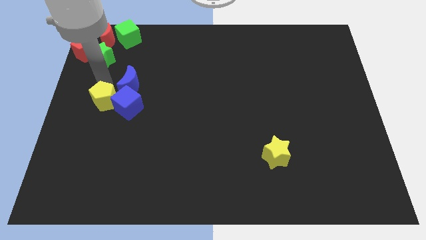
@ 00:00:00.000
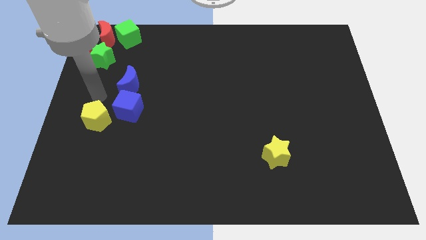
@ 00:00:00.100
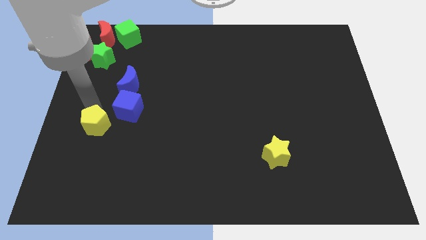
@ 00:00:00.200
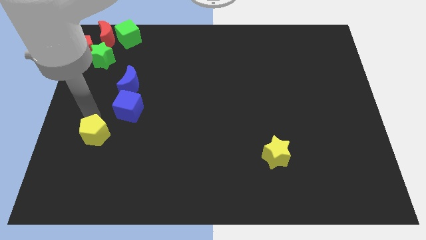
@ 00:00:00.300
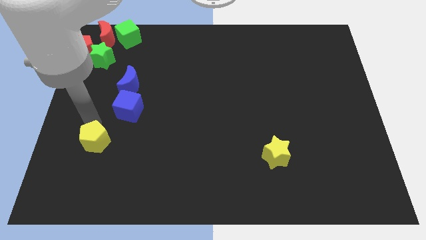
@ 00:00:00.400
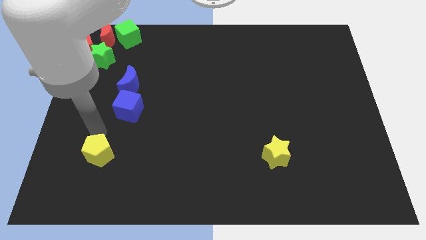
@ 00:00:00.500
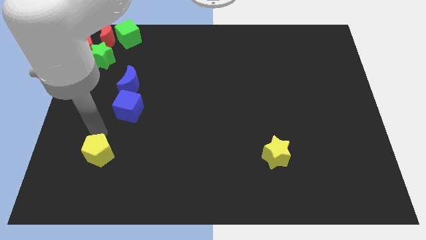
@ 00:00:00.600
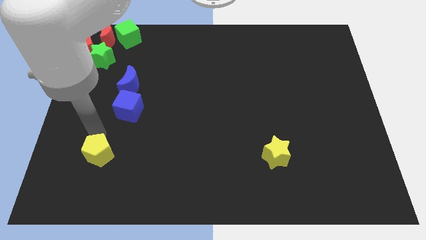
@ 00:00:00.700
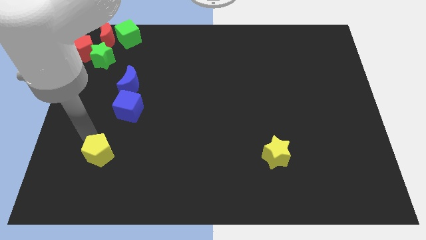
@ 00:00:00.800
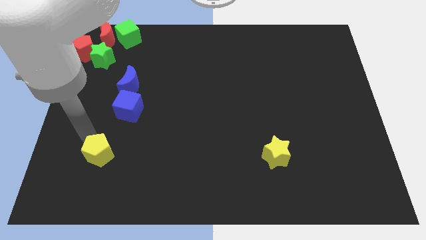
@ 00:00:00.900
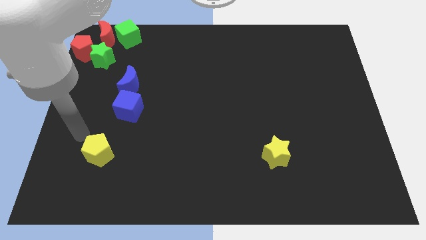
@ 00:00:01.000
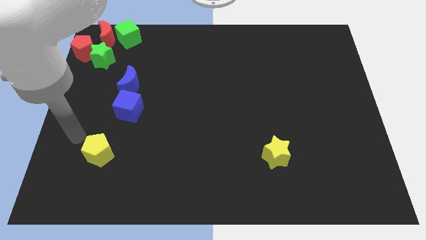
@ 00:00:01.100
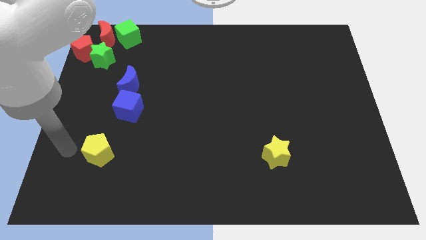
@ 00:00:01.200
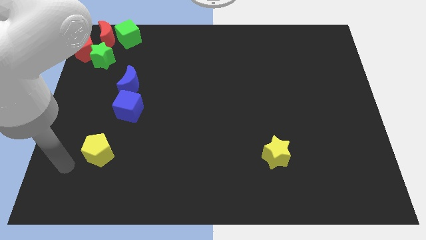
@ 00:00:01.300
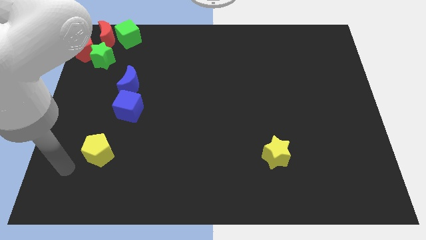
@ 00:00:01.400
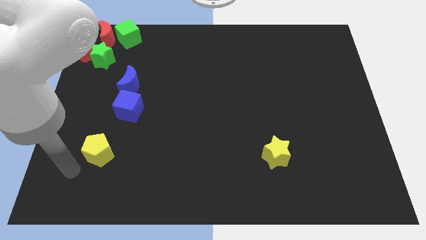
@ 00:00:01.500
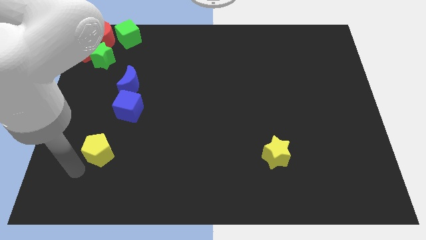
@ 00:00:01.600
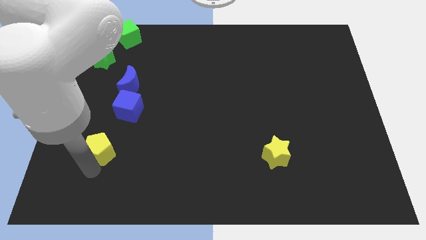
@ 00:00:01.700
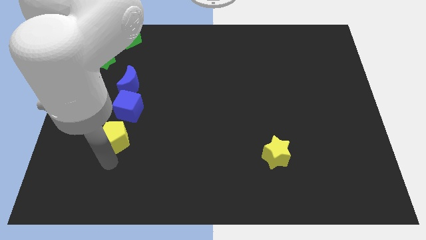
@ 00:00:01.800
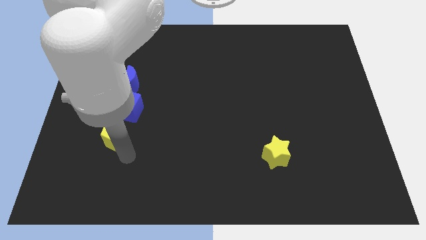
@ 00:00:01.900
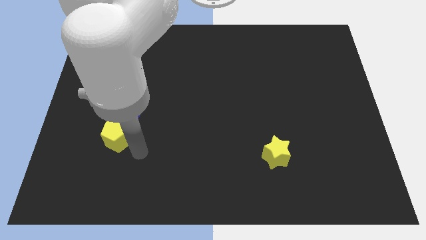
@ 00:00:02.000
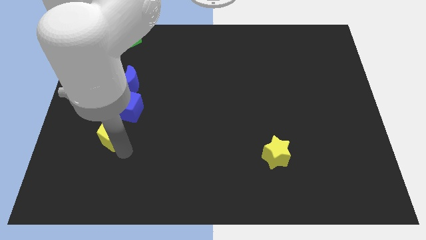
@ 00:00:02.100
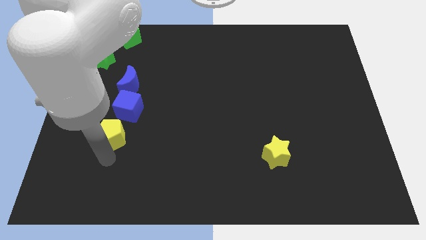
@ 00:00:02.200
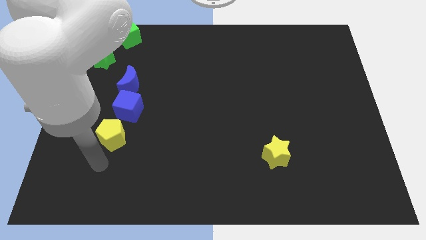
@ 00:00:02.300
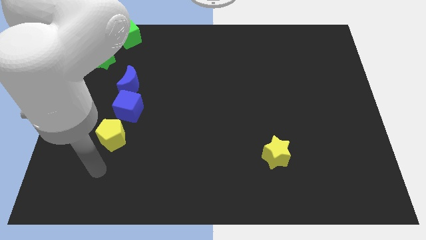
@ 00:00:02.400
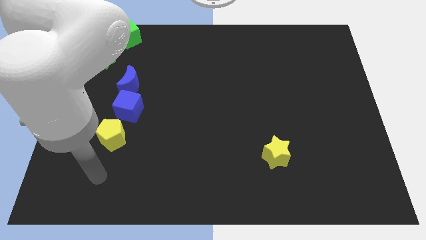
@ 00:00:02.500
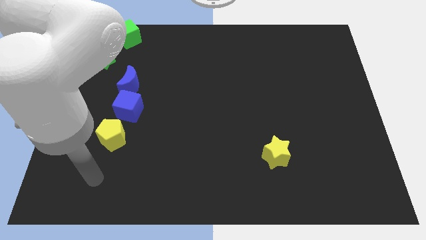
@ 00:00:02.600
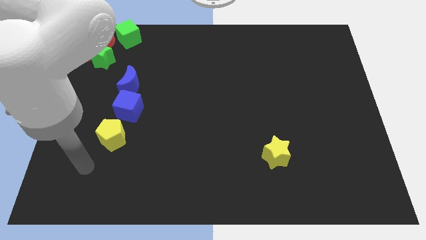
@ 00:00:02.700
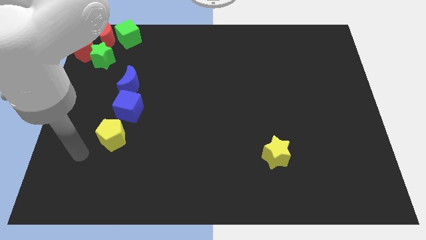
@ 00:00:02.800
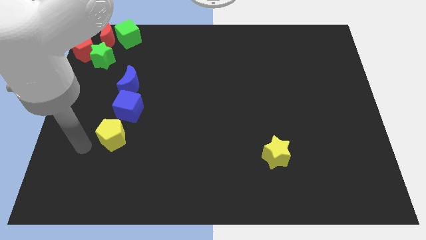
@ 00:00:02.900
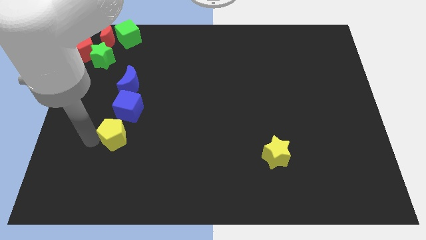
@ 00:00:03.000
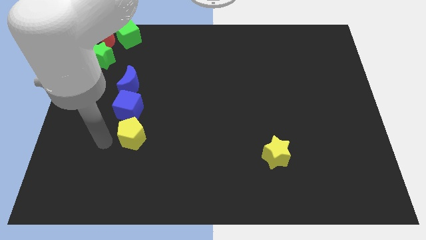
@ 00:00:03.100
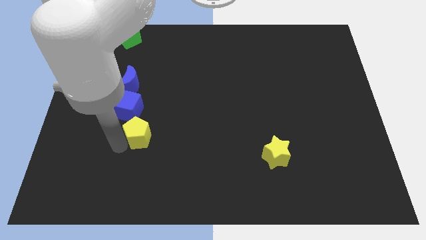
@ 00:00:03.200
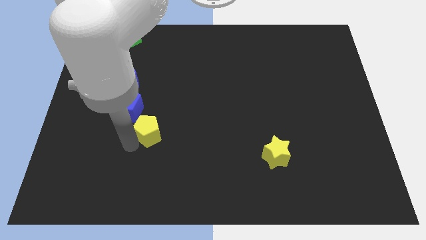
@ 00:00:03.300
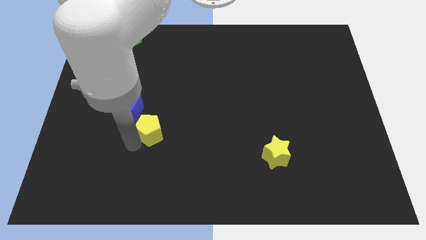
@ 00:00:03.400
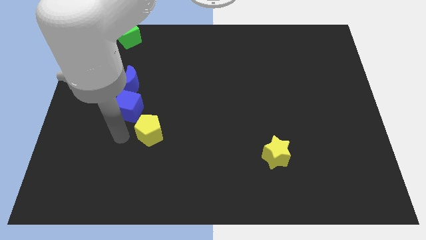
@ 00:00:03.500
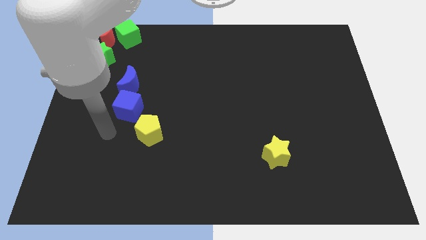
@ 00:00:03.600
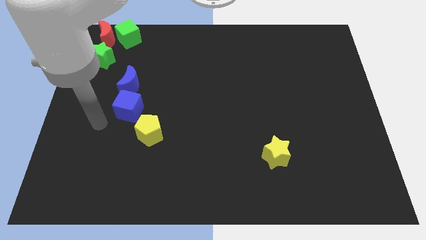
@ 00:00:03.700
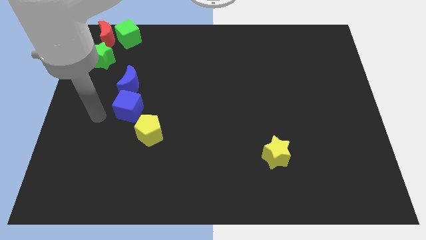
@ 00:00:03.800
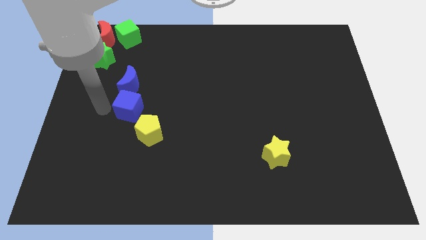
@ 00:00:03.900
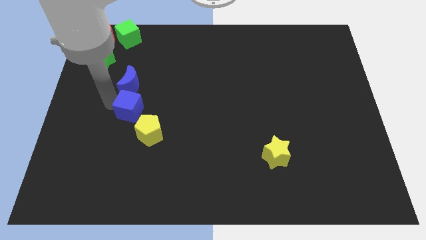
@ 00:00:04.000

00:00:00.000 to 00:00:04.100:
place the yellow pentagon left to the yellow star

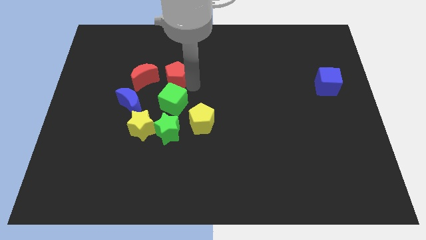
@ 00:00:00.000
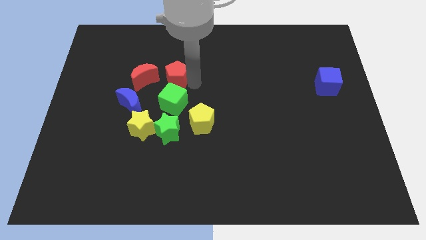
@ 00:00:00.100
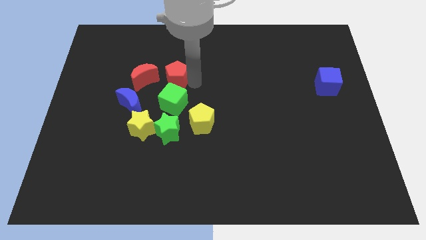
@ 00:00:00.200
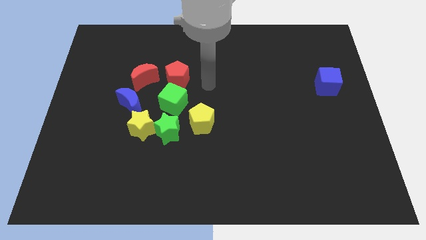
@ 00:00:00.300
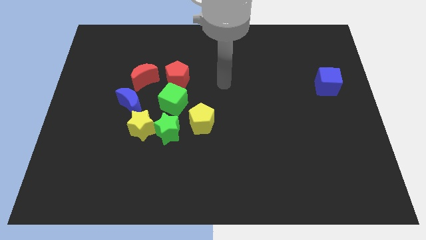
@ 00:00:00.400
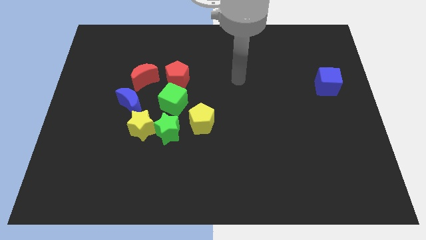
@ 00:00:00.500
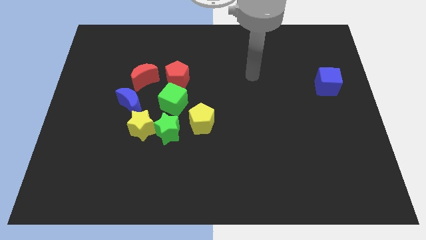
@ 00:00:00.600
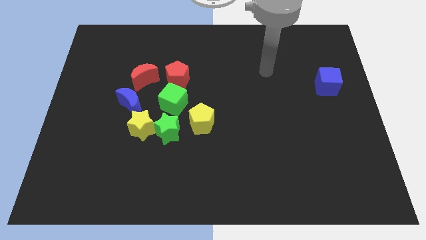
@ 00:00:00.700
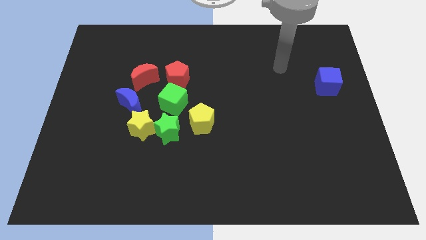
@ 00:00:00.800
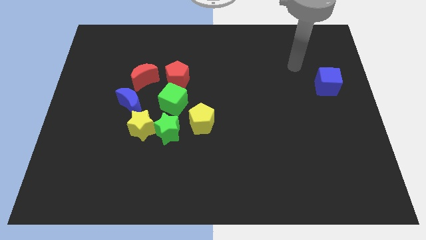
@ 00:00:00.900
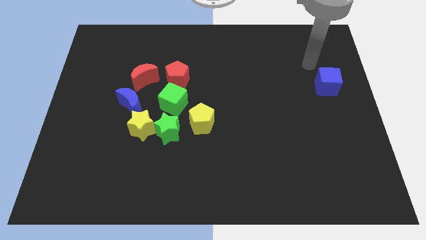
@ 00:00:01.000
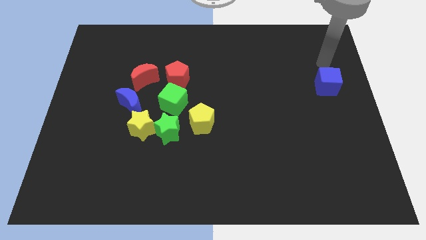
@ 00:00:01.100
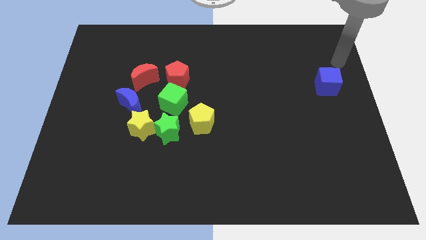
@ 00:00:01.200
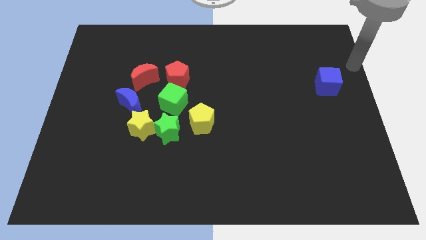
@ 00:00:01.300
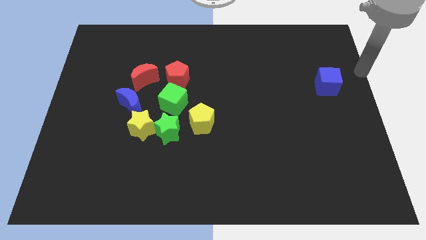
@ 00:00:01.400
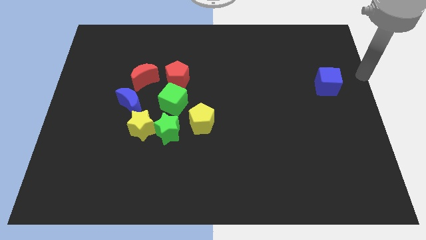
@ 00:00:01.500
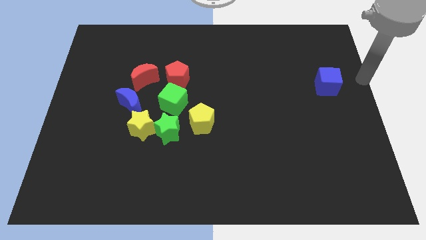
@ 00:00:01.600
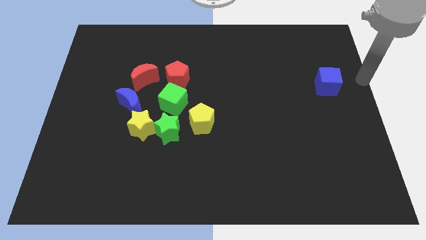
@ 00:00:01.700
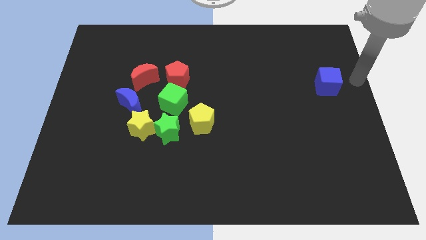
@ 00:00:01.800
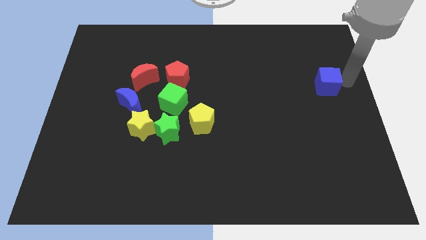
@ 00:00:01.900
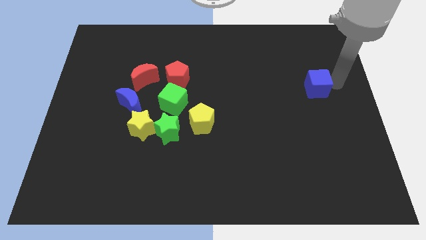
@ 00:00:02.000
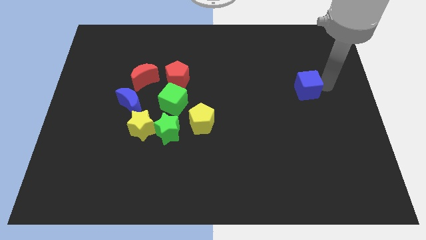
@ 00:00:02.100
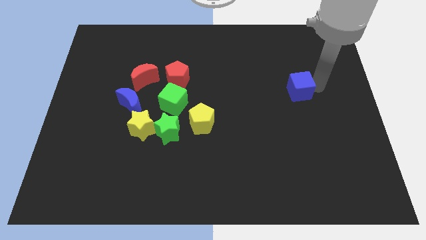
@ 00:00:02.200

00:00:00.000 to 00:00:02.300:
slightly push the blue cube to the left

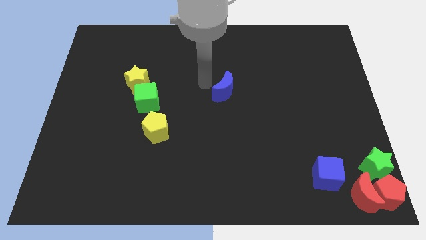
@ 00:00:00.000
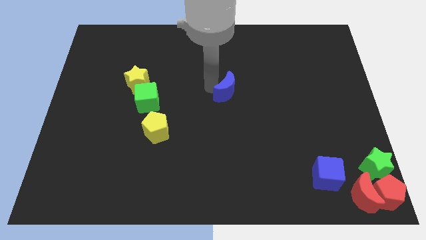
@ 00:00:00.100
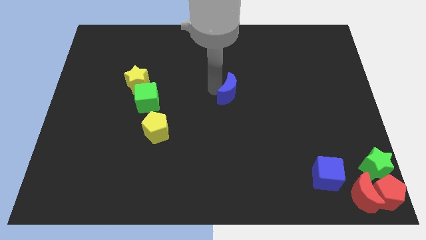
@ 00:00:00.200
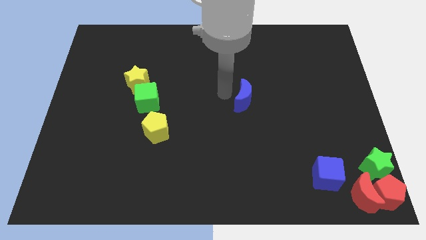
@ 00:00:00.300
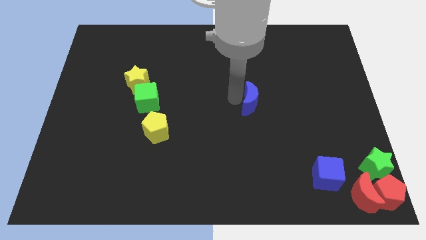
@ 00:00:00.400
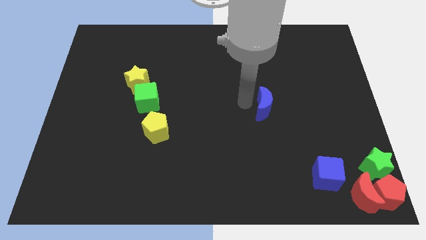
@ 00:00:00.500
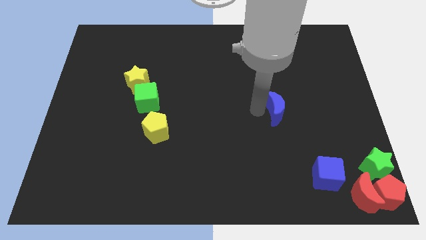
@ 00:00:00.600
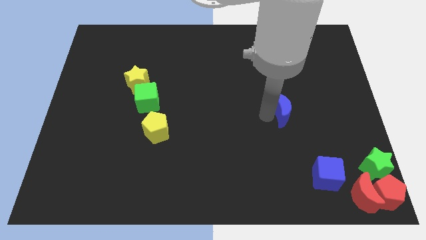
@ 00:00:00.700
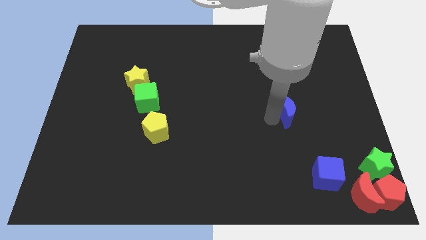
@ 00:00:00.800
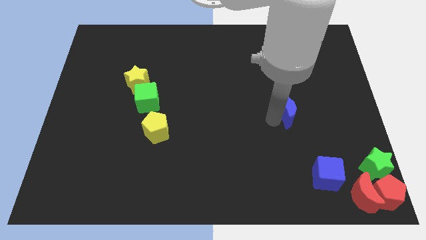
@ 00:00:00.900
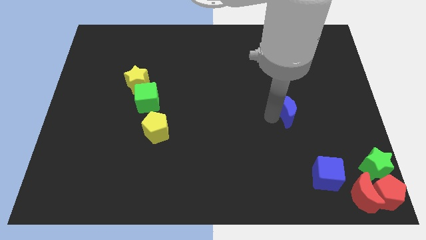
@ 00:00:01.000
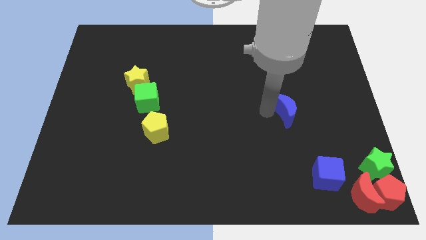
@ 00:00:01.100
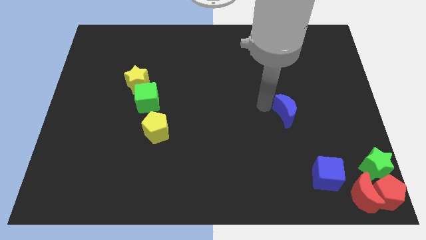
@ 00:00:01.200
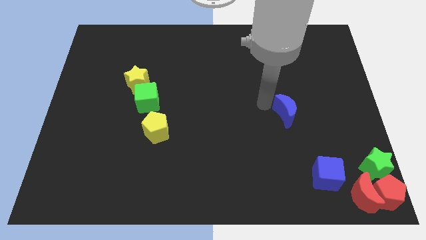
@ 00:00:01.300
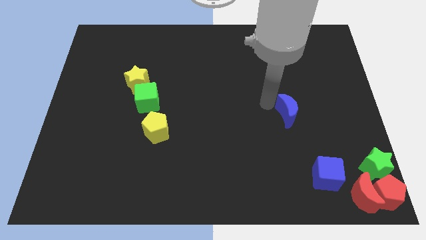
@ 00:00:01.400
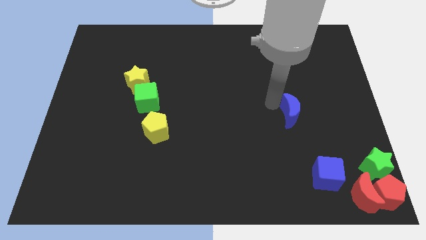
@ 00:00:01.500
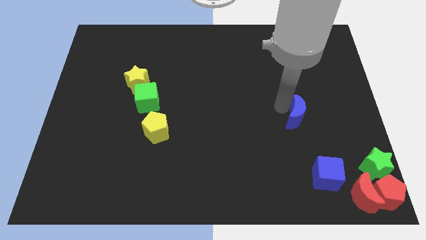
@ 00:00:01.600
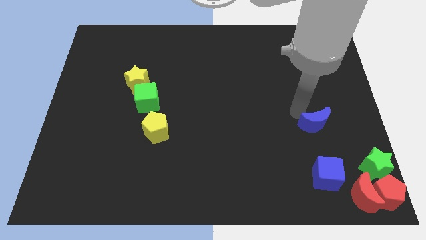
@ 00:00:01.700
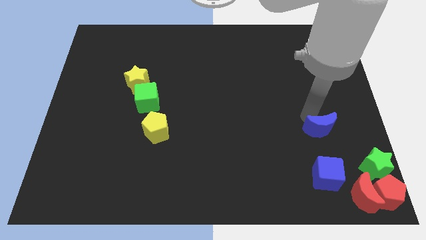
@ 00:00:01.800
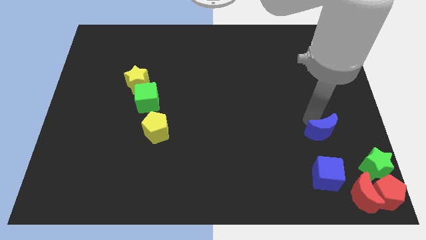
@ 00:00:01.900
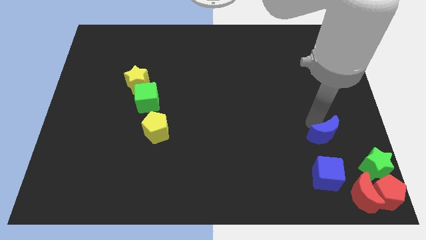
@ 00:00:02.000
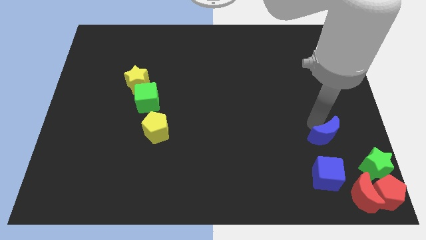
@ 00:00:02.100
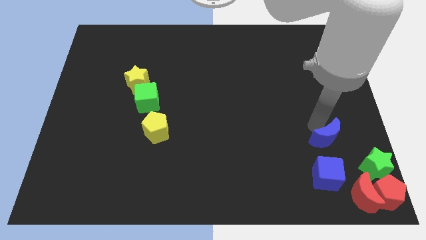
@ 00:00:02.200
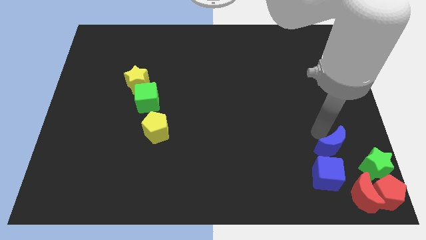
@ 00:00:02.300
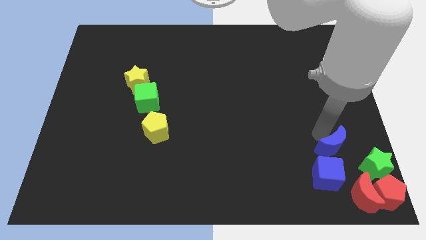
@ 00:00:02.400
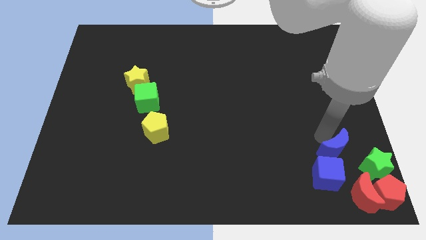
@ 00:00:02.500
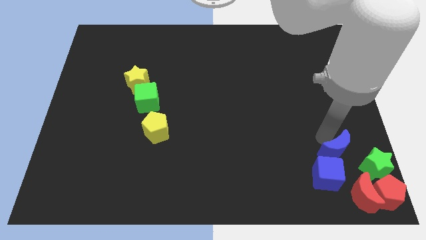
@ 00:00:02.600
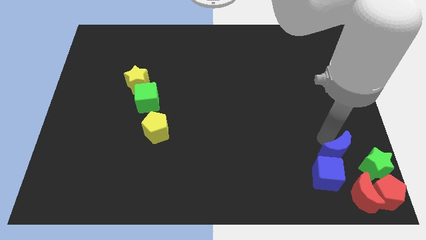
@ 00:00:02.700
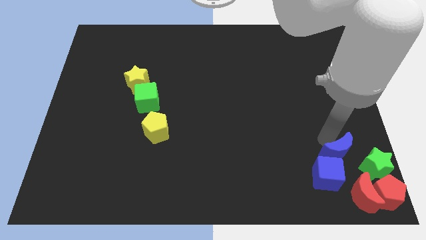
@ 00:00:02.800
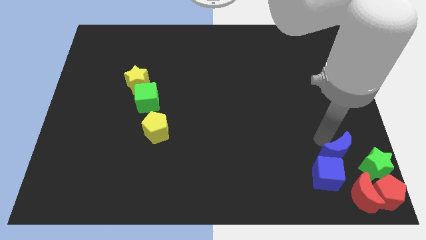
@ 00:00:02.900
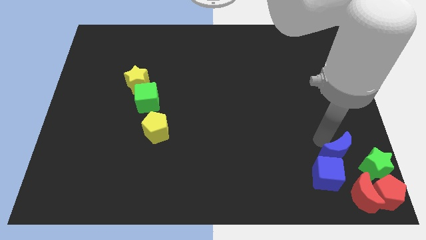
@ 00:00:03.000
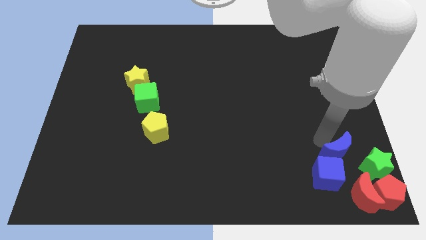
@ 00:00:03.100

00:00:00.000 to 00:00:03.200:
push the blue crescent close to the top side of the blue cube
